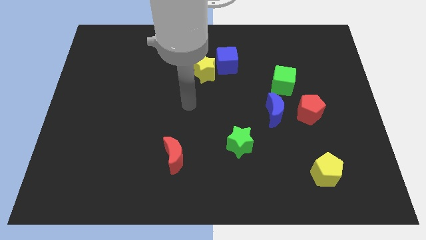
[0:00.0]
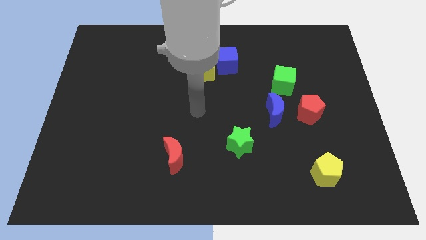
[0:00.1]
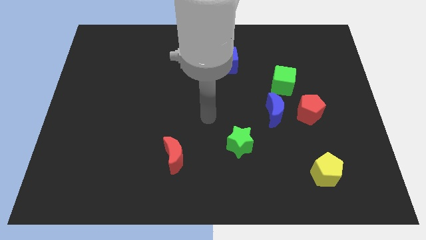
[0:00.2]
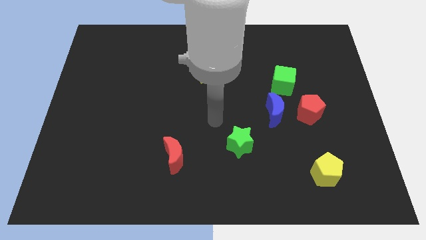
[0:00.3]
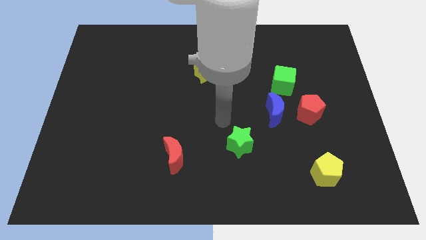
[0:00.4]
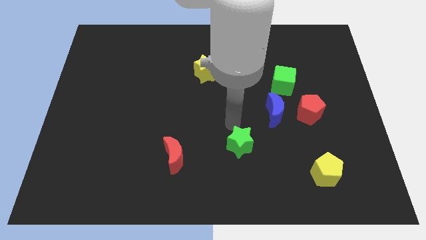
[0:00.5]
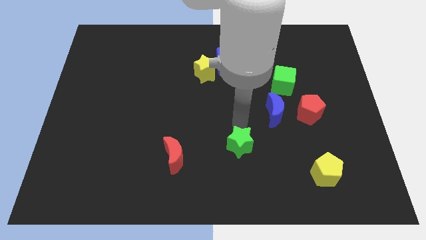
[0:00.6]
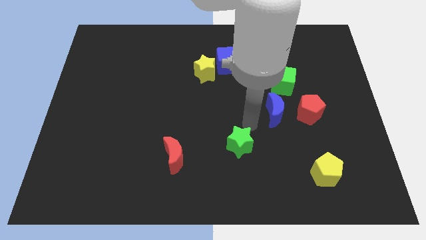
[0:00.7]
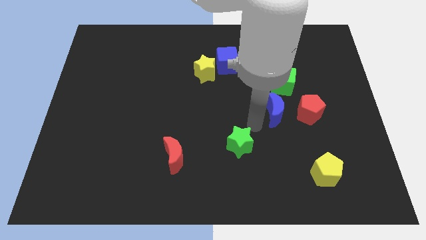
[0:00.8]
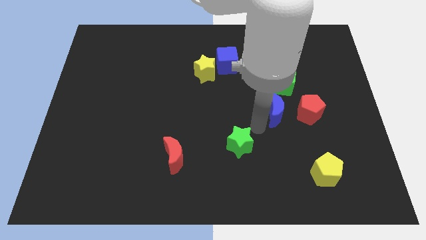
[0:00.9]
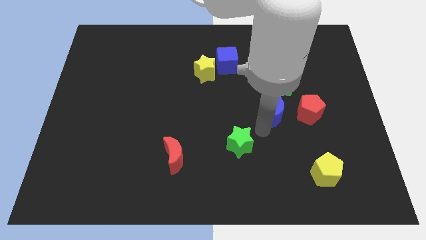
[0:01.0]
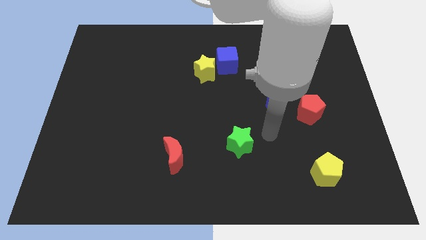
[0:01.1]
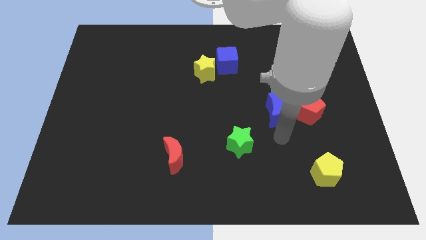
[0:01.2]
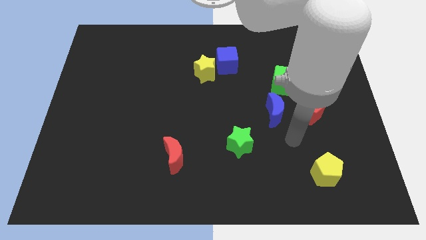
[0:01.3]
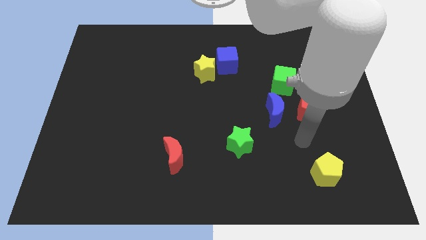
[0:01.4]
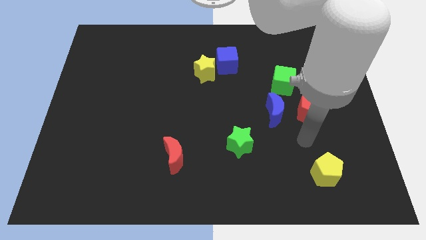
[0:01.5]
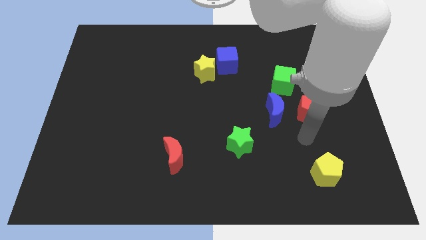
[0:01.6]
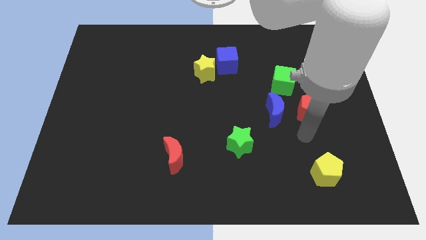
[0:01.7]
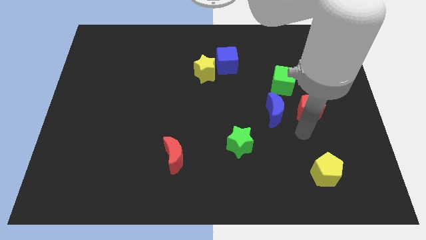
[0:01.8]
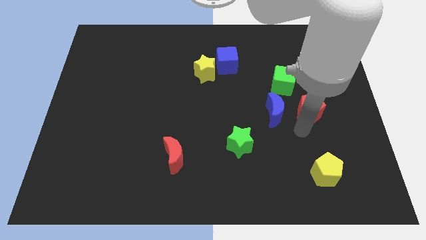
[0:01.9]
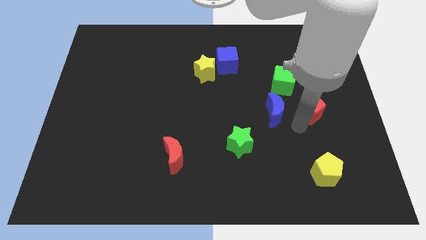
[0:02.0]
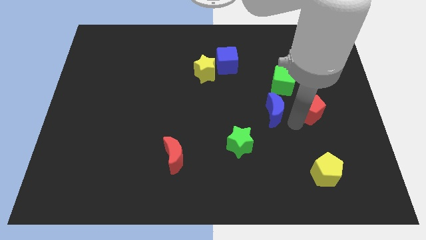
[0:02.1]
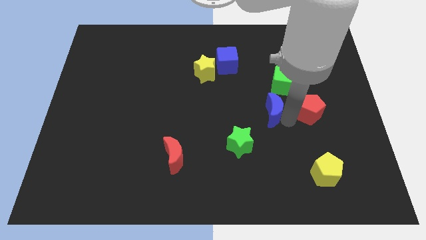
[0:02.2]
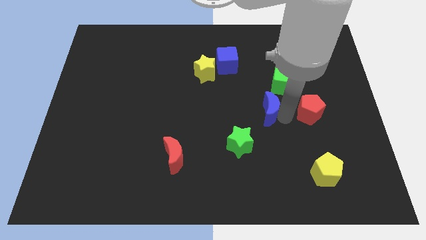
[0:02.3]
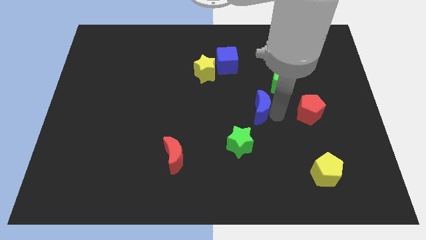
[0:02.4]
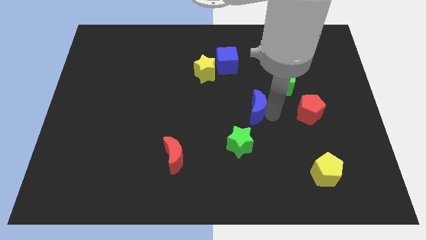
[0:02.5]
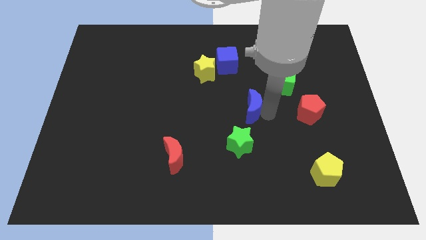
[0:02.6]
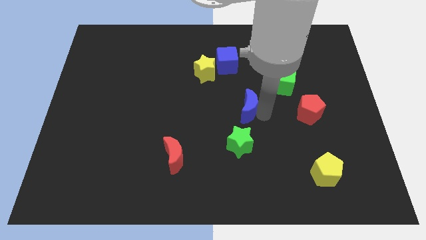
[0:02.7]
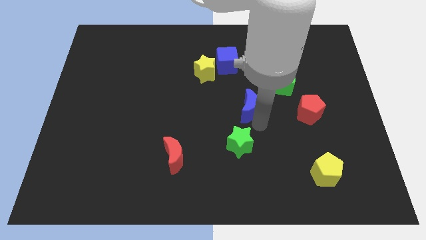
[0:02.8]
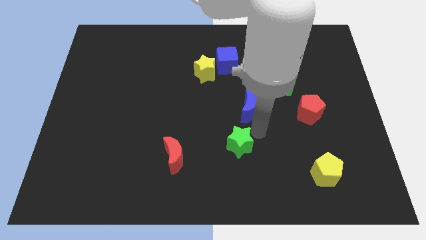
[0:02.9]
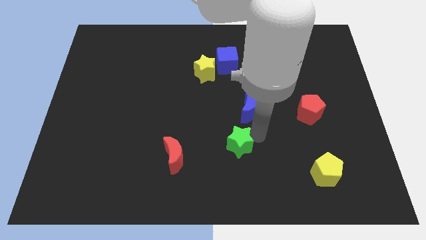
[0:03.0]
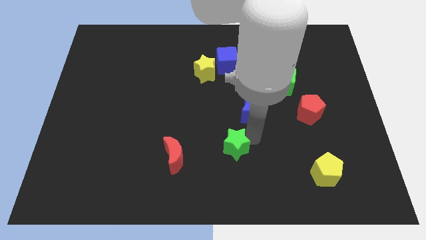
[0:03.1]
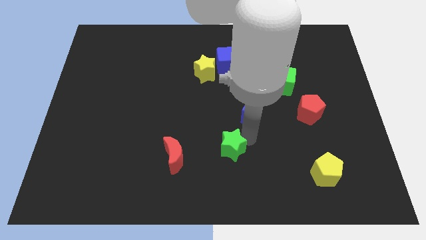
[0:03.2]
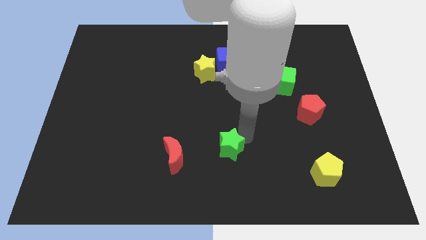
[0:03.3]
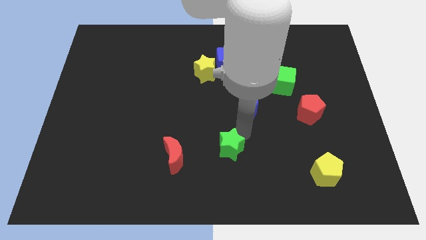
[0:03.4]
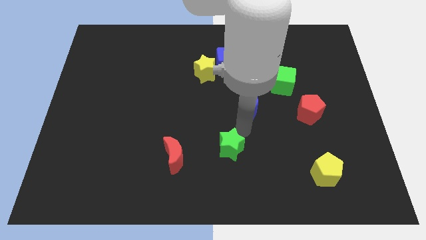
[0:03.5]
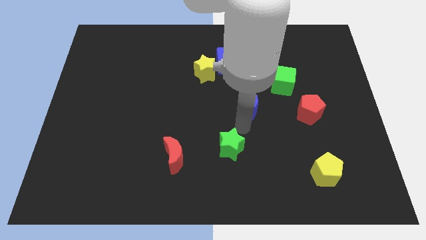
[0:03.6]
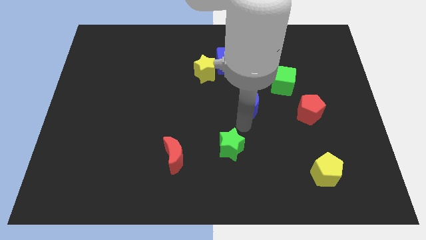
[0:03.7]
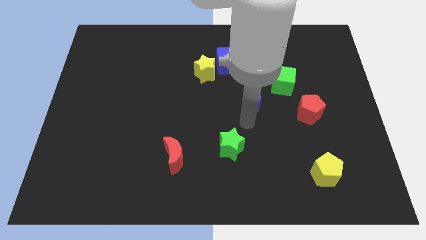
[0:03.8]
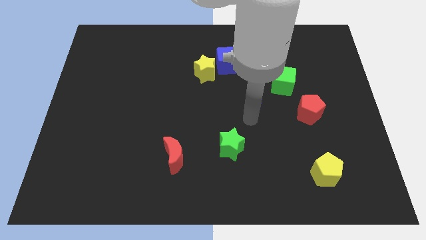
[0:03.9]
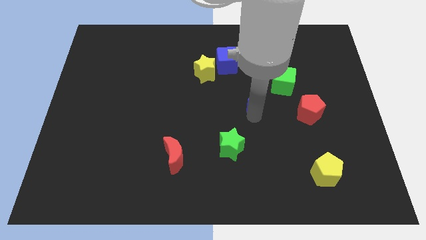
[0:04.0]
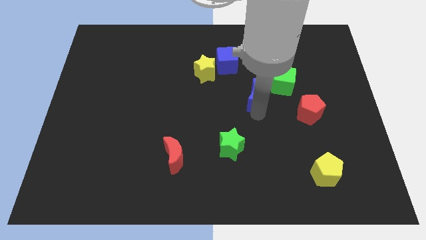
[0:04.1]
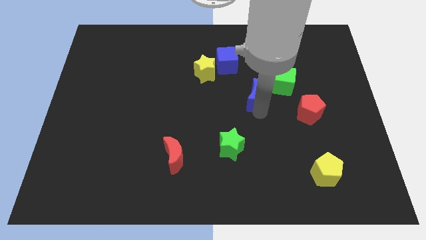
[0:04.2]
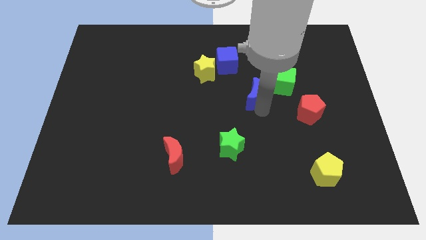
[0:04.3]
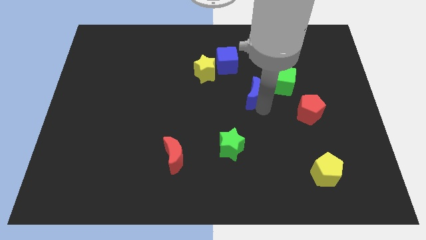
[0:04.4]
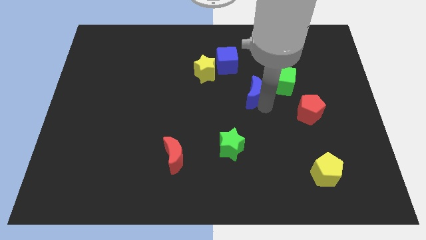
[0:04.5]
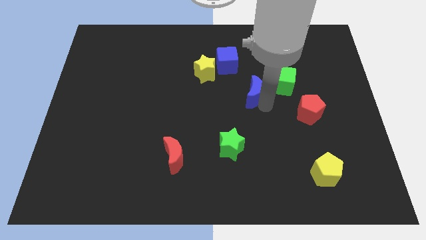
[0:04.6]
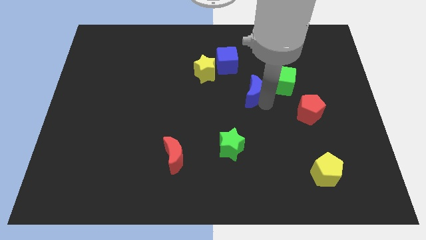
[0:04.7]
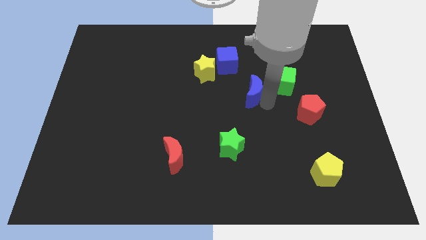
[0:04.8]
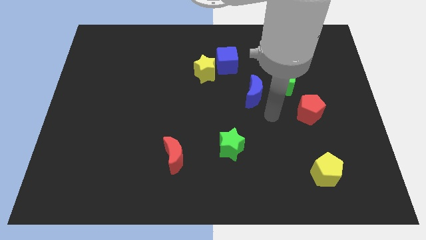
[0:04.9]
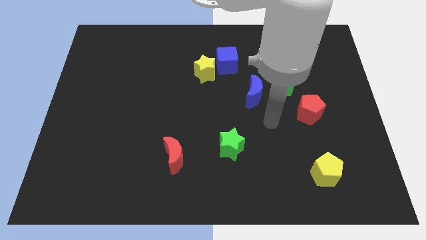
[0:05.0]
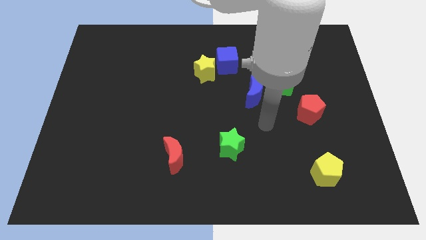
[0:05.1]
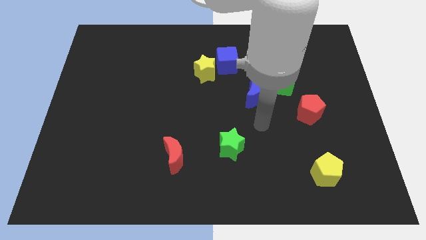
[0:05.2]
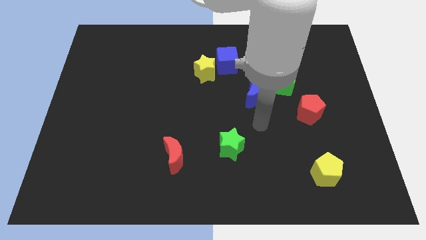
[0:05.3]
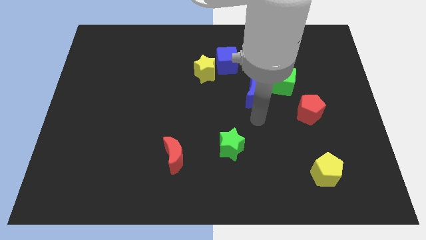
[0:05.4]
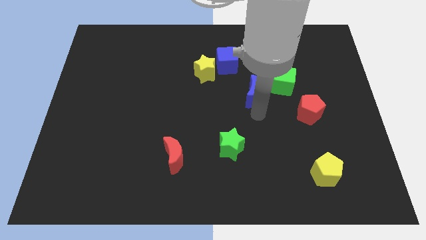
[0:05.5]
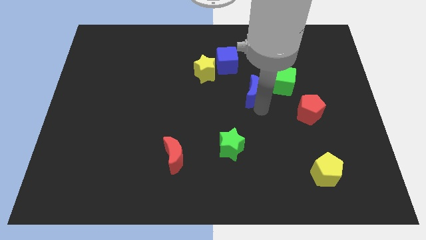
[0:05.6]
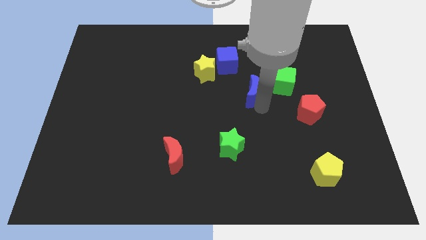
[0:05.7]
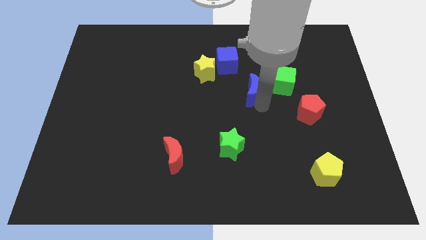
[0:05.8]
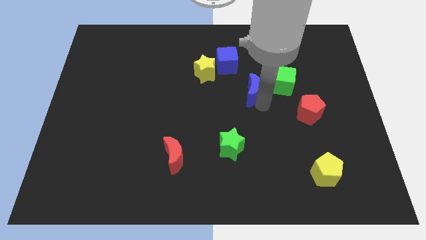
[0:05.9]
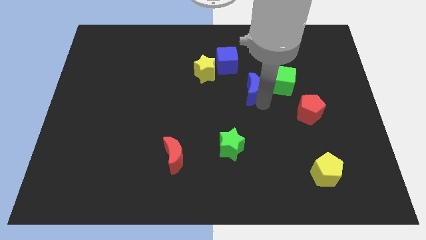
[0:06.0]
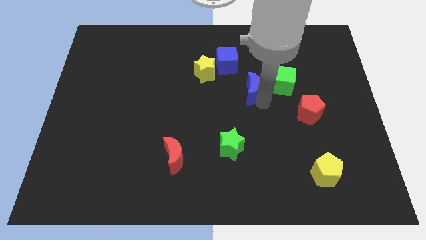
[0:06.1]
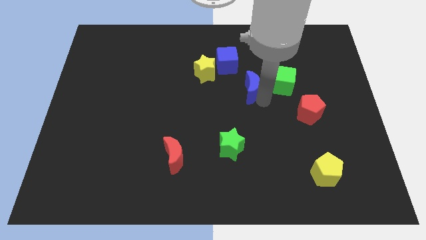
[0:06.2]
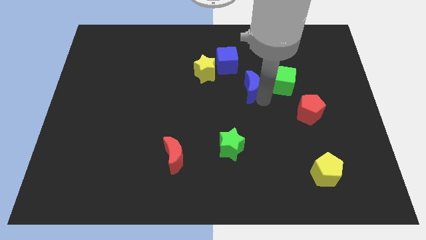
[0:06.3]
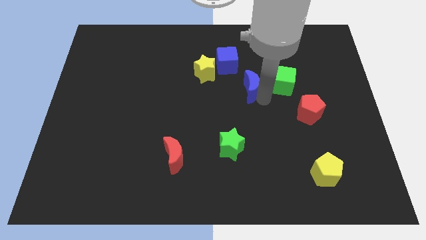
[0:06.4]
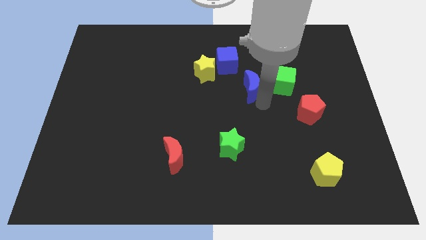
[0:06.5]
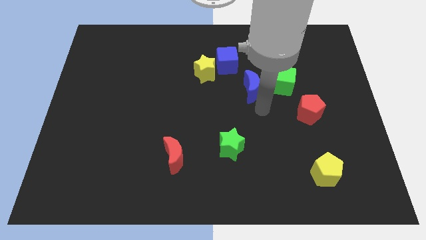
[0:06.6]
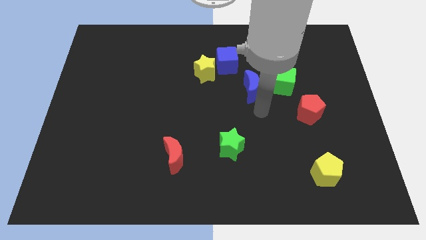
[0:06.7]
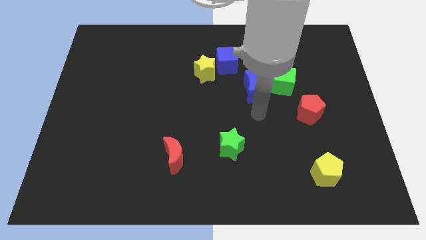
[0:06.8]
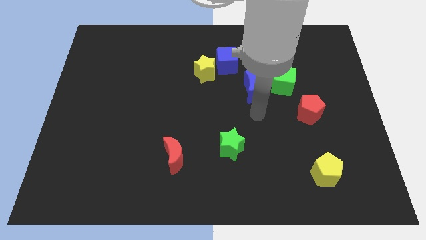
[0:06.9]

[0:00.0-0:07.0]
move the blue crescent to the top of the board

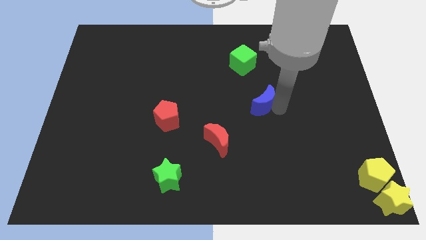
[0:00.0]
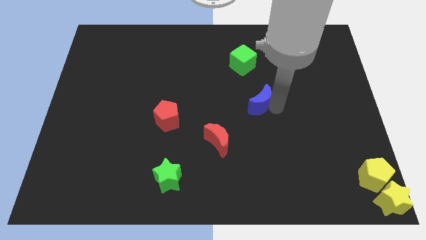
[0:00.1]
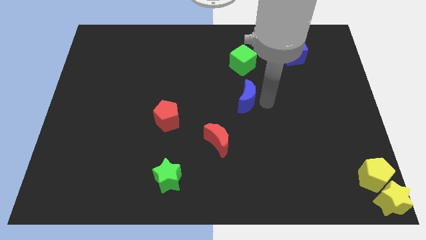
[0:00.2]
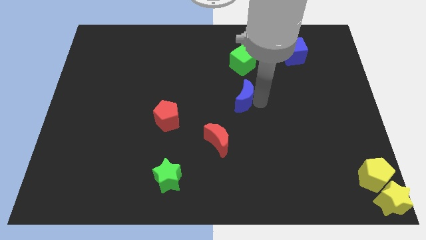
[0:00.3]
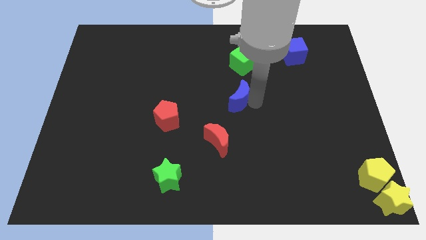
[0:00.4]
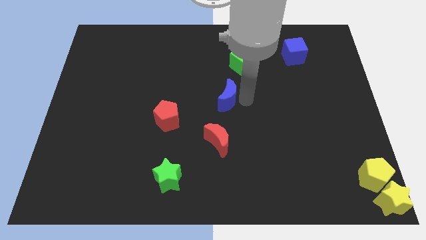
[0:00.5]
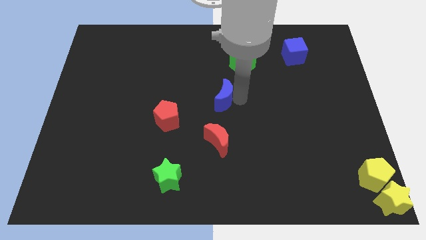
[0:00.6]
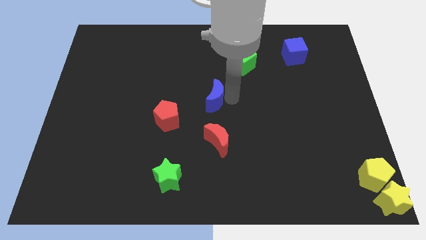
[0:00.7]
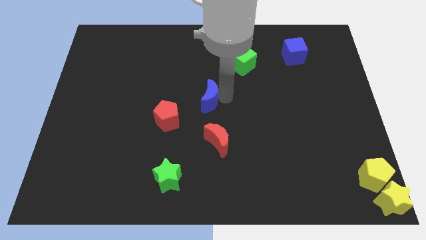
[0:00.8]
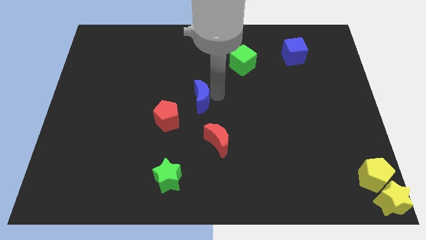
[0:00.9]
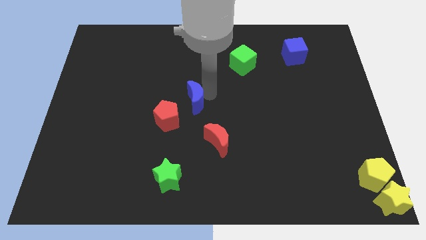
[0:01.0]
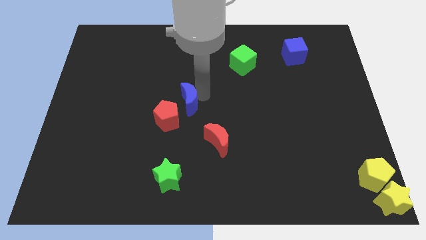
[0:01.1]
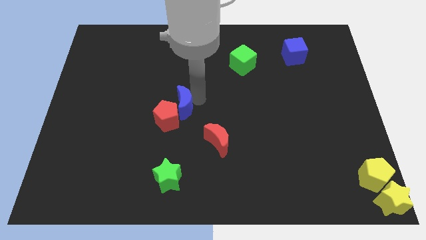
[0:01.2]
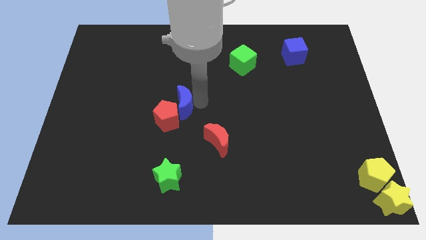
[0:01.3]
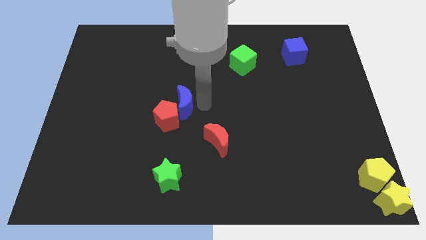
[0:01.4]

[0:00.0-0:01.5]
move blue moon into the red pentagon

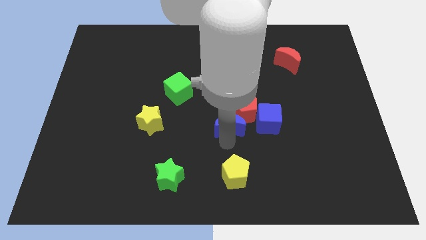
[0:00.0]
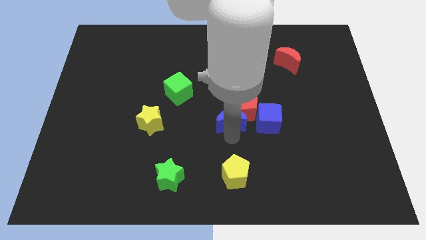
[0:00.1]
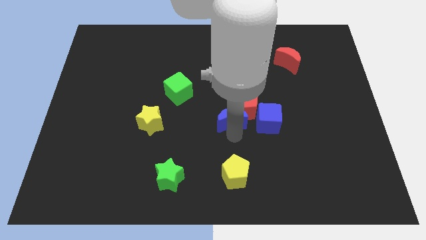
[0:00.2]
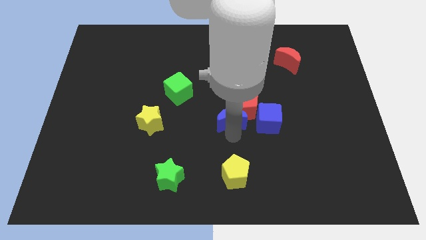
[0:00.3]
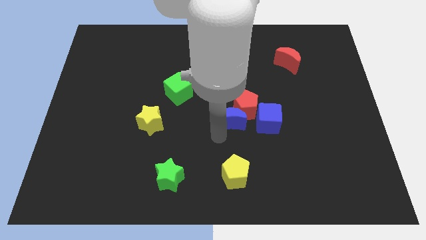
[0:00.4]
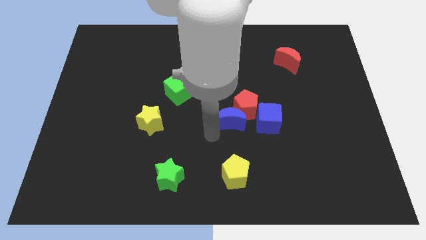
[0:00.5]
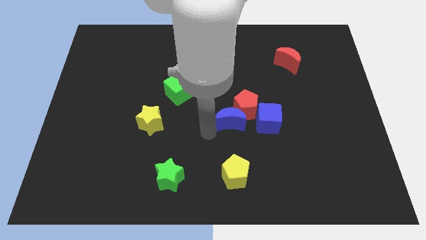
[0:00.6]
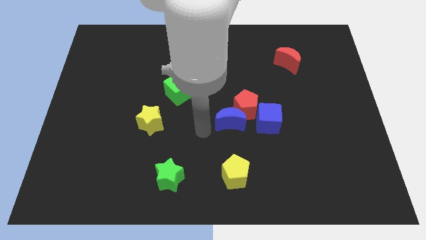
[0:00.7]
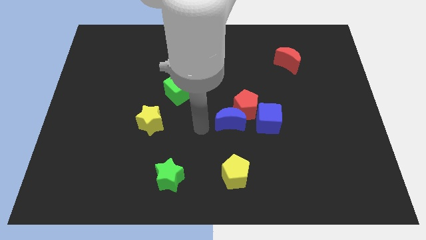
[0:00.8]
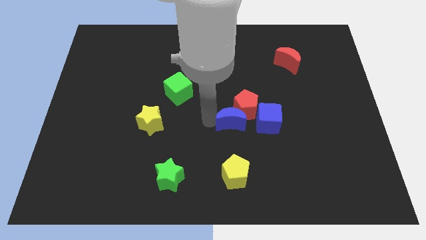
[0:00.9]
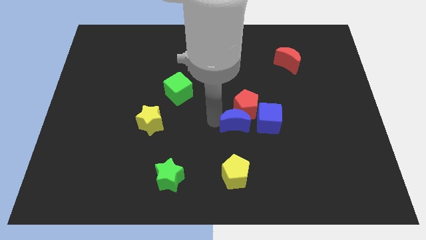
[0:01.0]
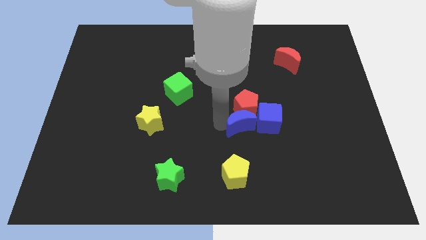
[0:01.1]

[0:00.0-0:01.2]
place blue crescent beside blue cube
